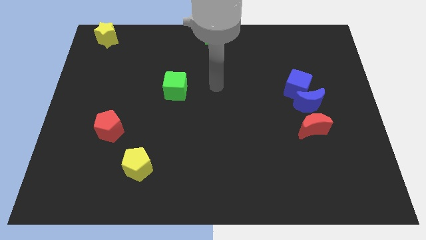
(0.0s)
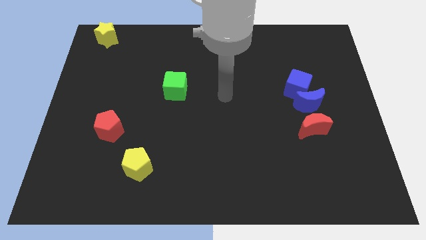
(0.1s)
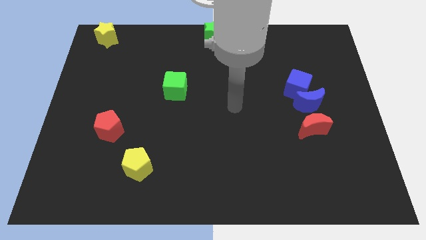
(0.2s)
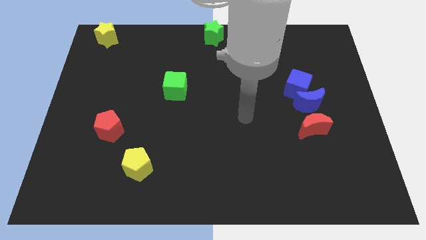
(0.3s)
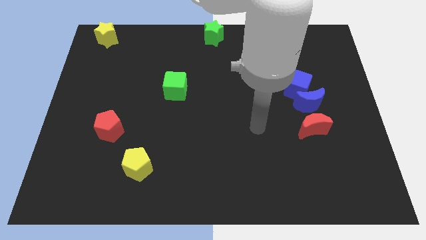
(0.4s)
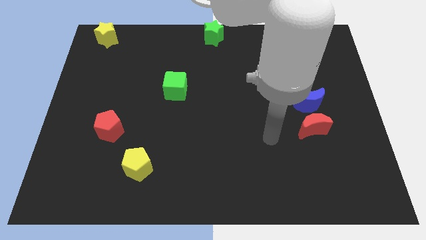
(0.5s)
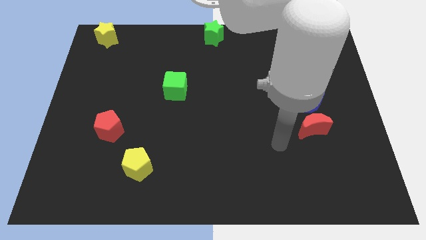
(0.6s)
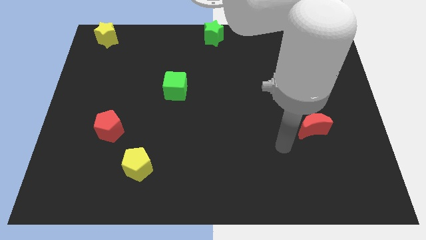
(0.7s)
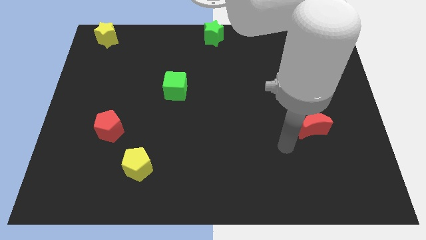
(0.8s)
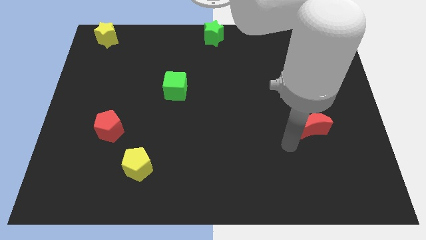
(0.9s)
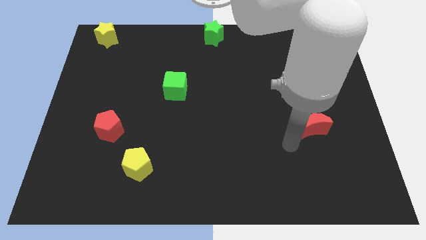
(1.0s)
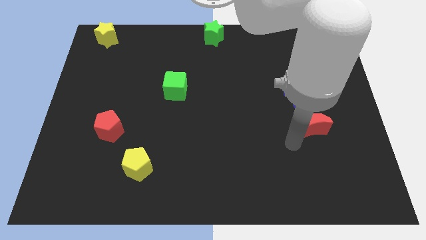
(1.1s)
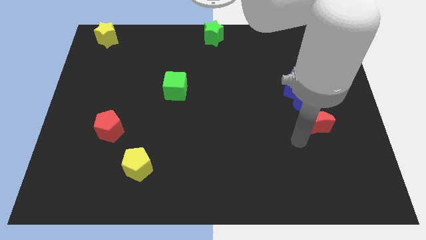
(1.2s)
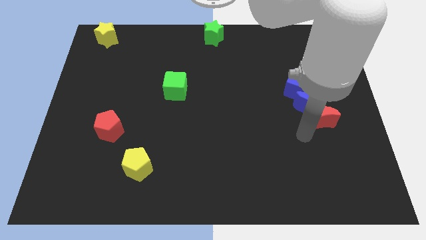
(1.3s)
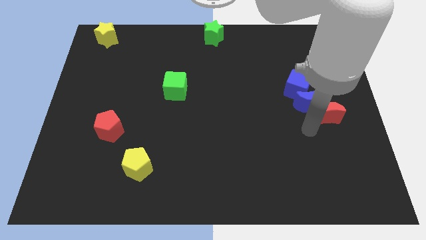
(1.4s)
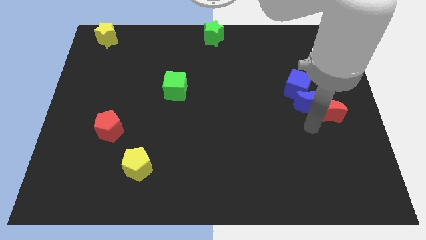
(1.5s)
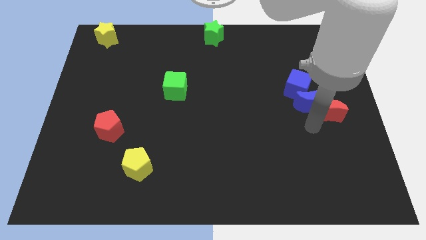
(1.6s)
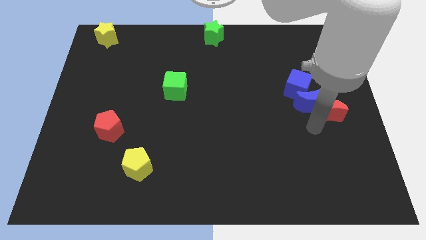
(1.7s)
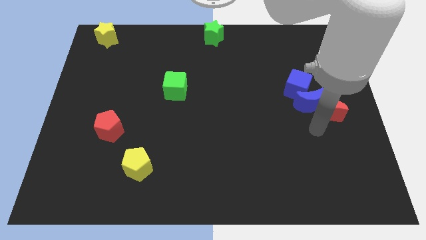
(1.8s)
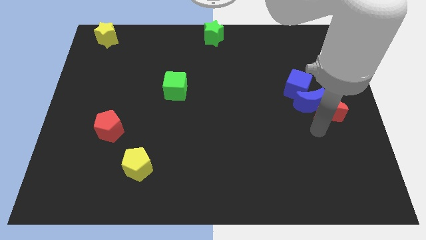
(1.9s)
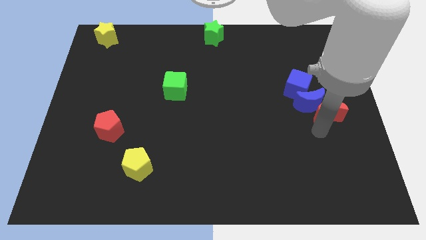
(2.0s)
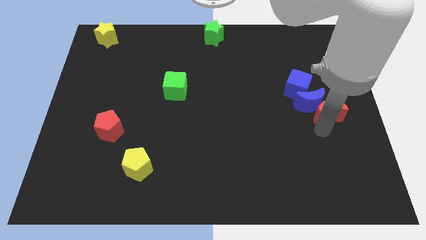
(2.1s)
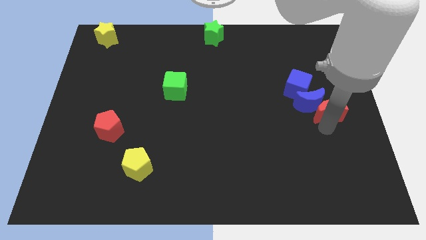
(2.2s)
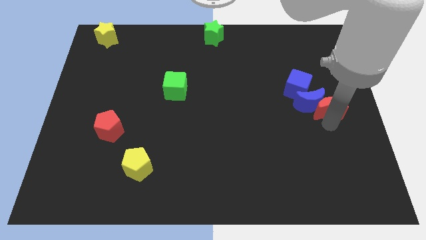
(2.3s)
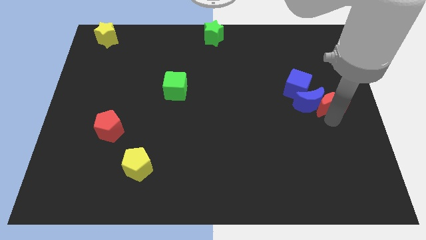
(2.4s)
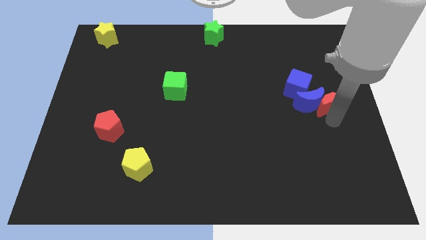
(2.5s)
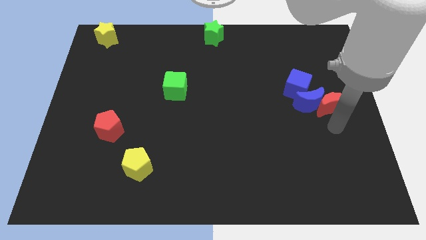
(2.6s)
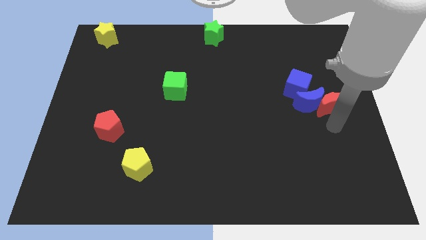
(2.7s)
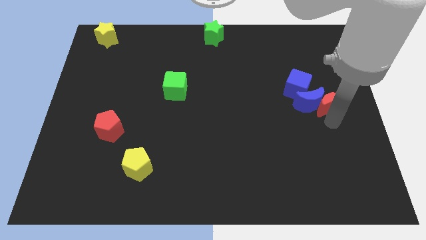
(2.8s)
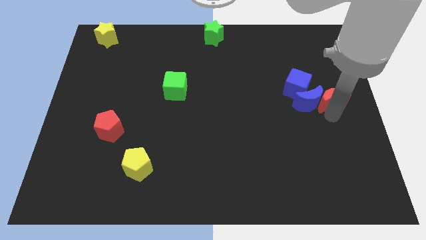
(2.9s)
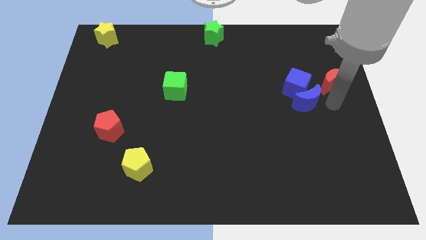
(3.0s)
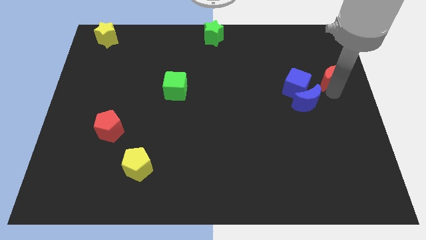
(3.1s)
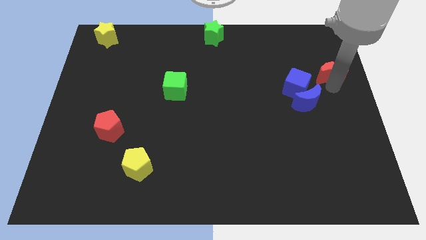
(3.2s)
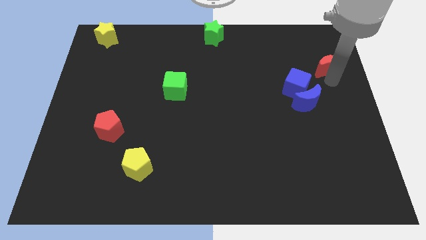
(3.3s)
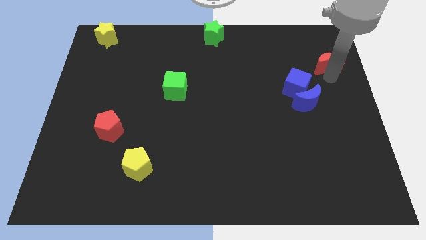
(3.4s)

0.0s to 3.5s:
move the red crescent towards the top right of the blue cube

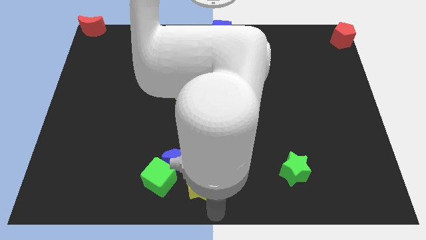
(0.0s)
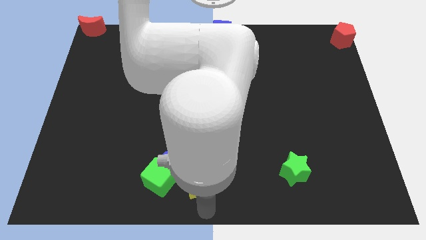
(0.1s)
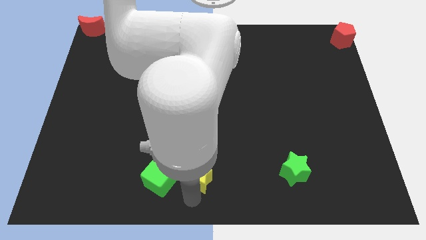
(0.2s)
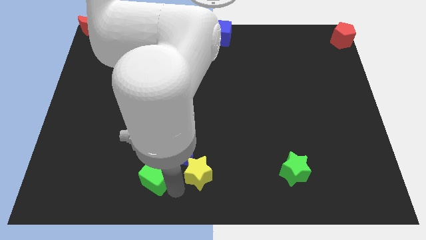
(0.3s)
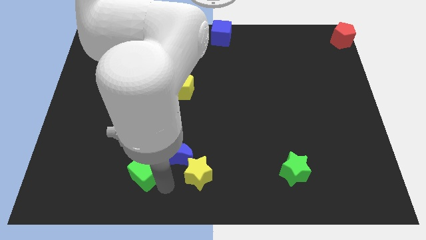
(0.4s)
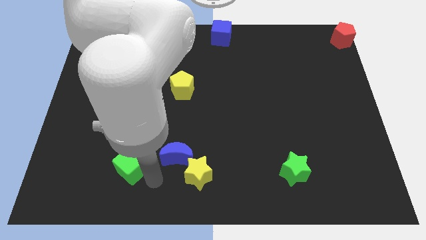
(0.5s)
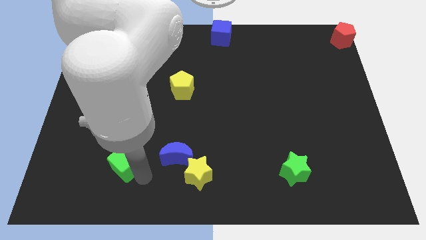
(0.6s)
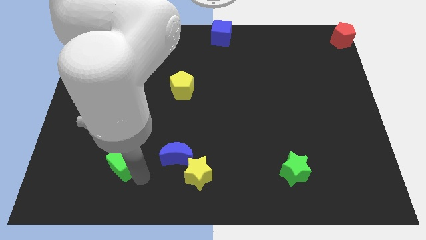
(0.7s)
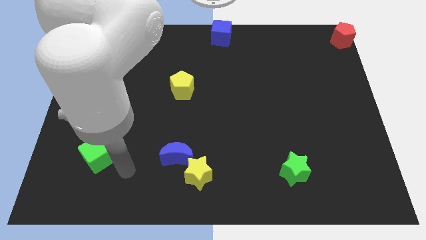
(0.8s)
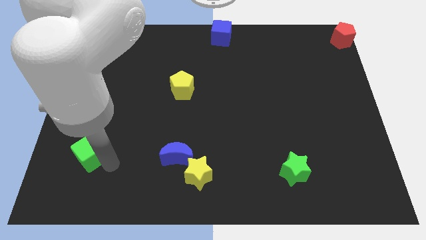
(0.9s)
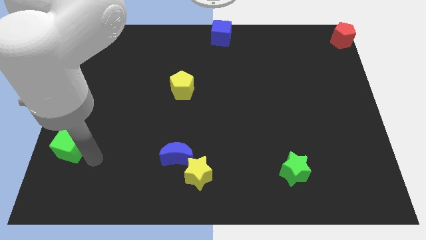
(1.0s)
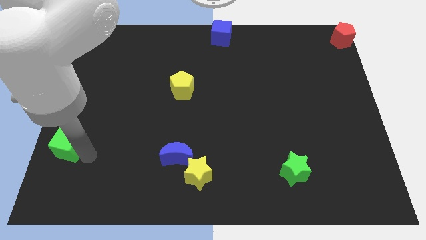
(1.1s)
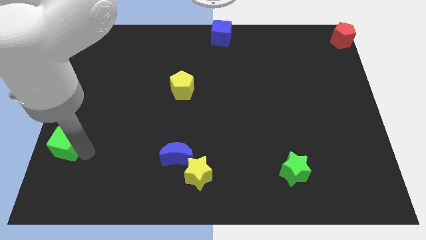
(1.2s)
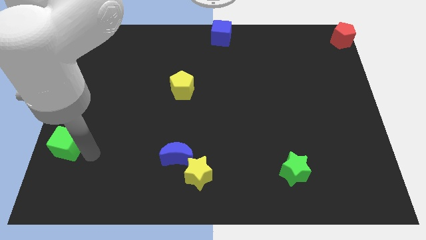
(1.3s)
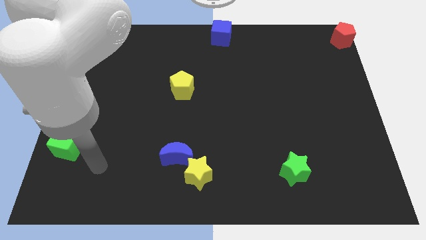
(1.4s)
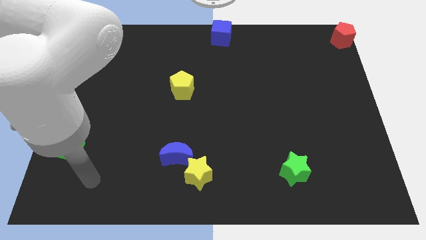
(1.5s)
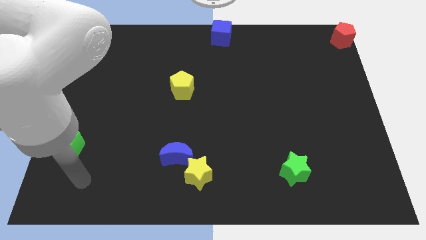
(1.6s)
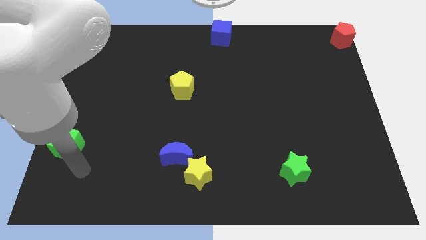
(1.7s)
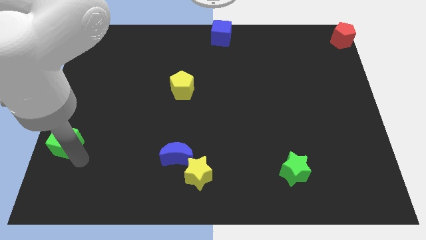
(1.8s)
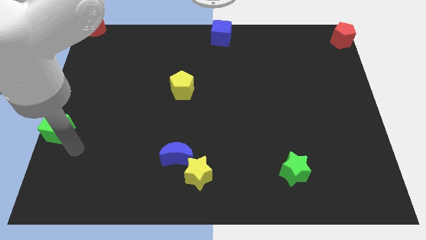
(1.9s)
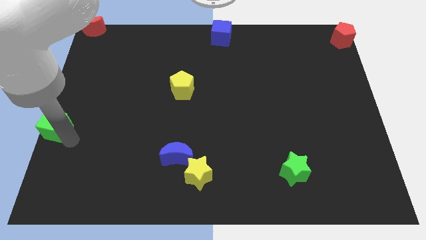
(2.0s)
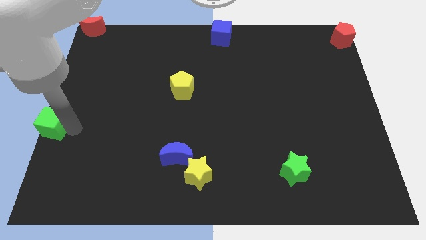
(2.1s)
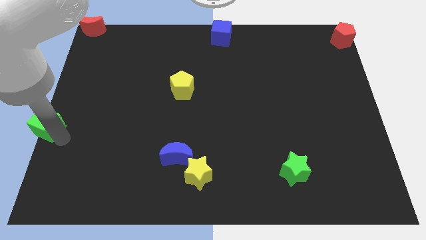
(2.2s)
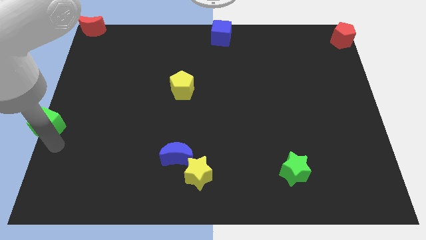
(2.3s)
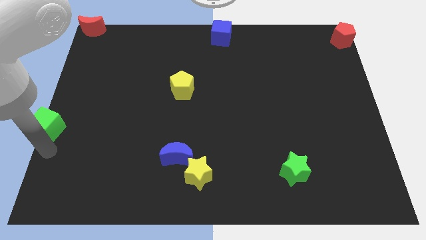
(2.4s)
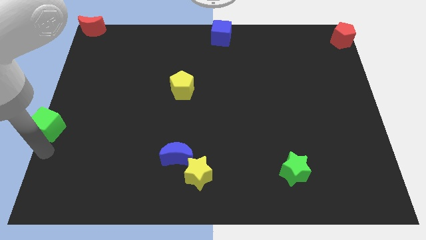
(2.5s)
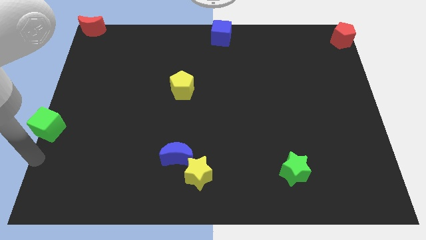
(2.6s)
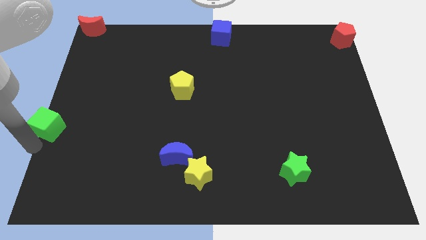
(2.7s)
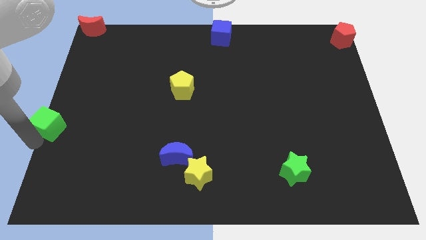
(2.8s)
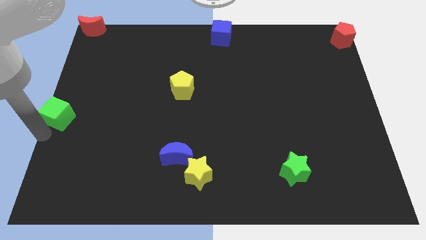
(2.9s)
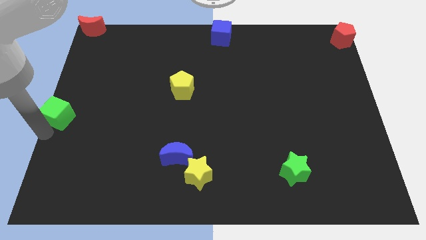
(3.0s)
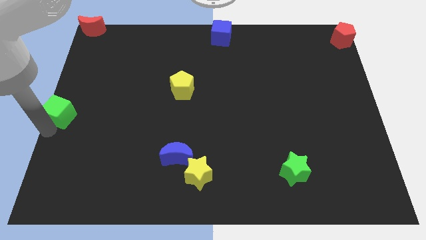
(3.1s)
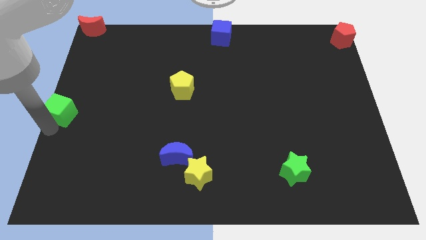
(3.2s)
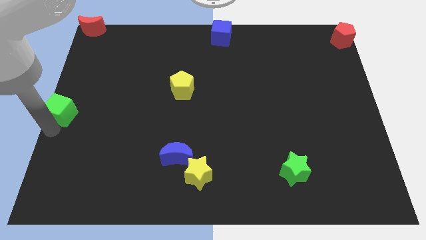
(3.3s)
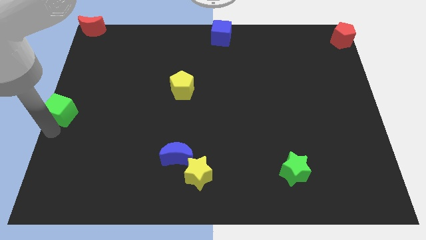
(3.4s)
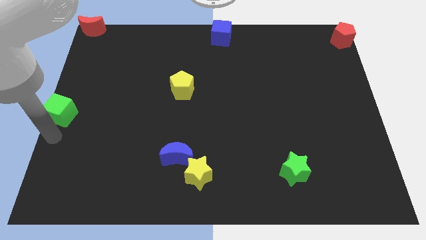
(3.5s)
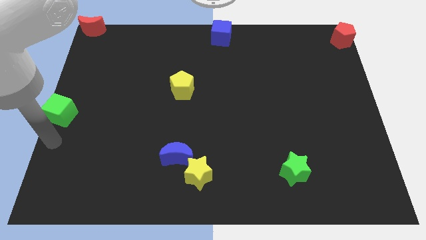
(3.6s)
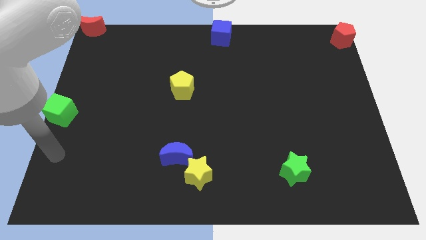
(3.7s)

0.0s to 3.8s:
move the green cube to the center left

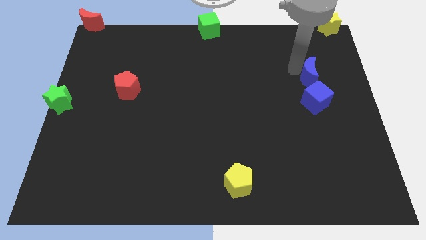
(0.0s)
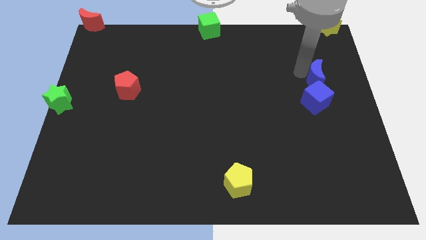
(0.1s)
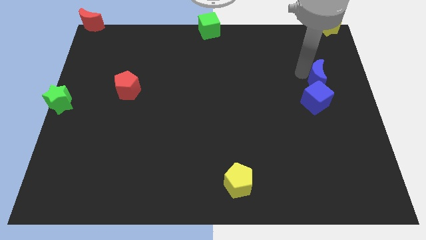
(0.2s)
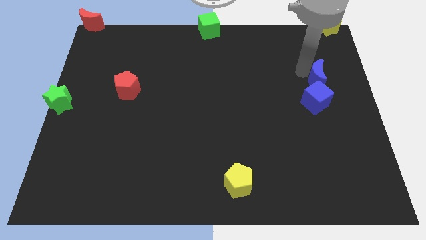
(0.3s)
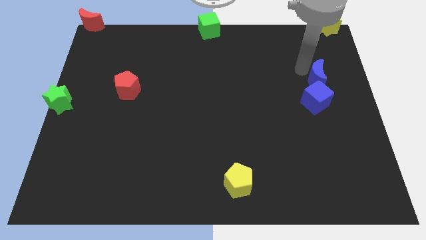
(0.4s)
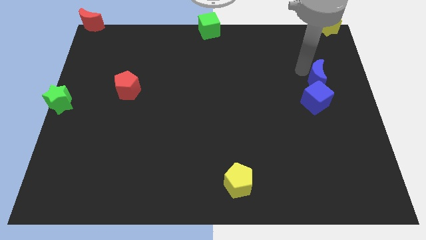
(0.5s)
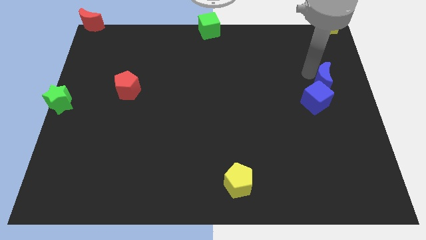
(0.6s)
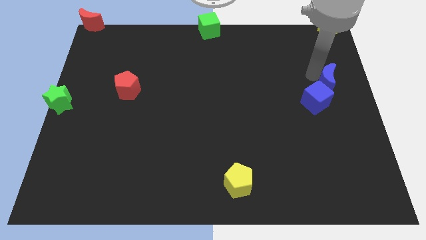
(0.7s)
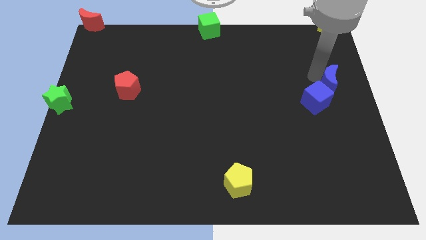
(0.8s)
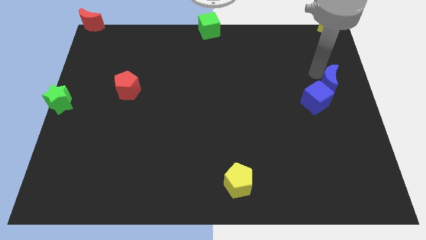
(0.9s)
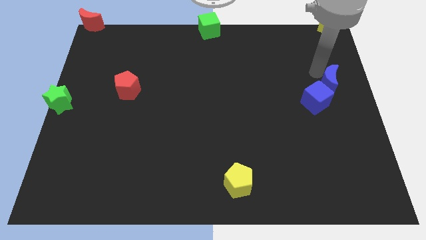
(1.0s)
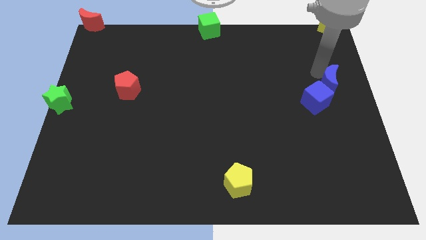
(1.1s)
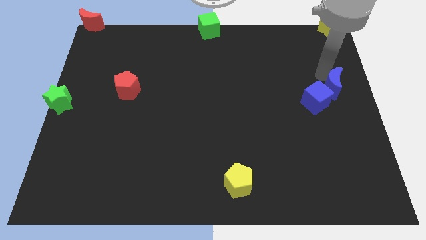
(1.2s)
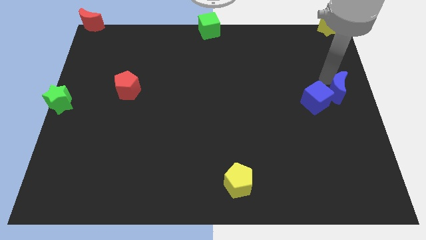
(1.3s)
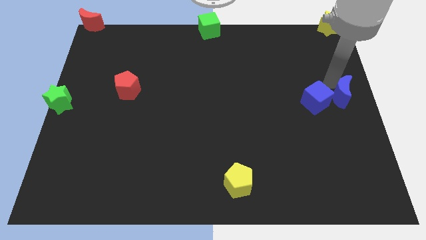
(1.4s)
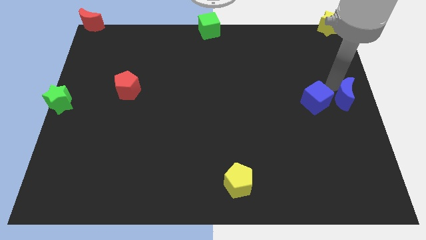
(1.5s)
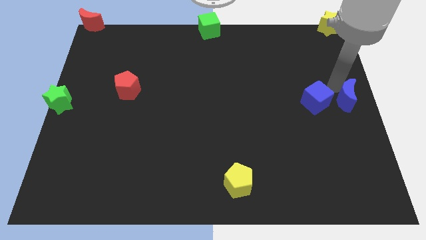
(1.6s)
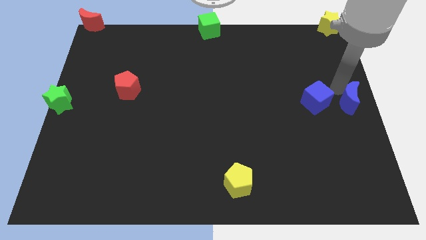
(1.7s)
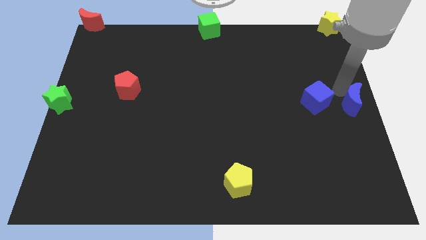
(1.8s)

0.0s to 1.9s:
move the blue crescent right to the blue cube
